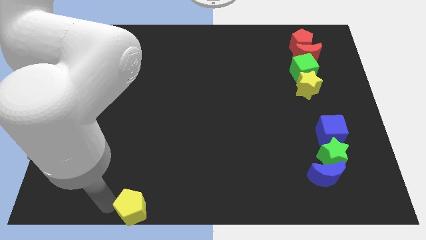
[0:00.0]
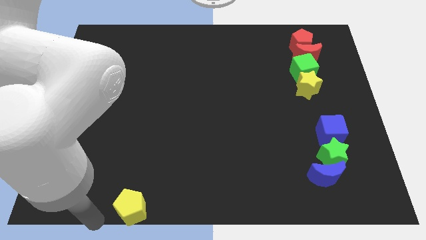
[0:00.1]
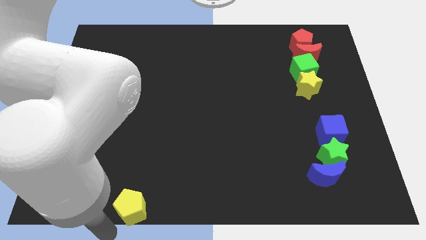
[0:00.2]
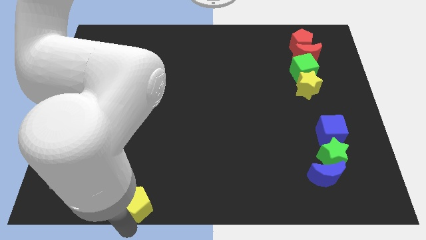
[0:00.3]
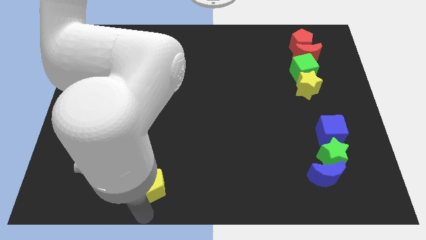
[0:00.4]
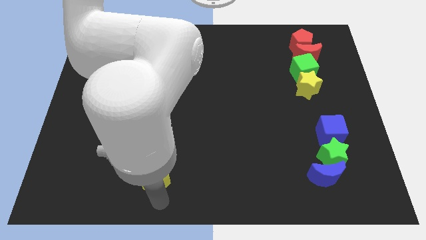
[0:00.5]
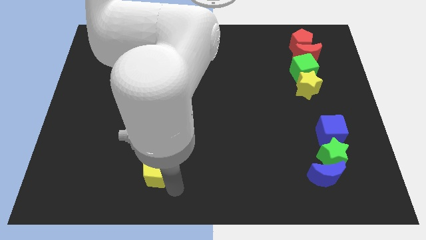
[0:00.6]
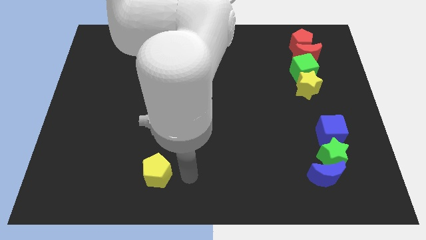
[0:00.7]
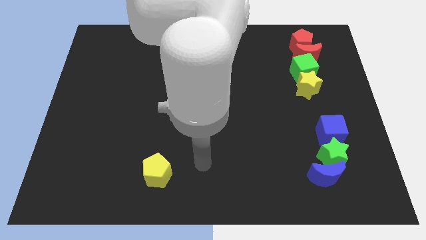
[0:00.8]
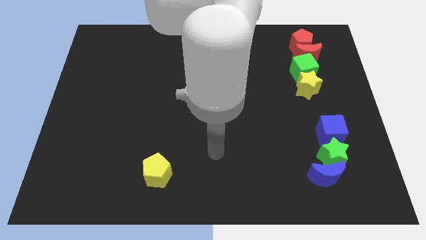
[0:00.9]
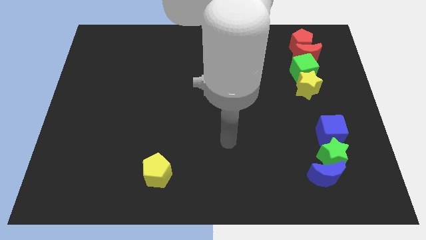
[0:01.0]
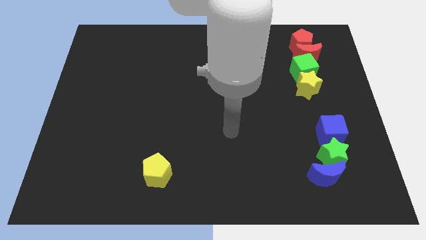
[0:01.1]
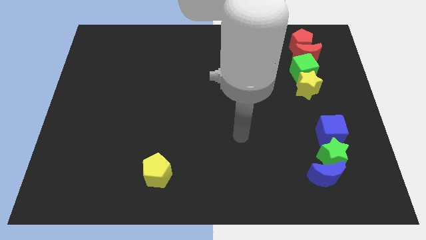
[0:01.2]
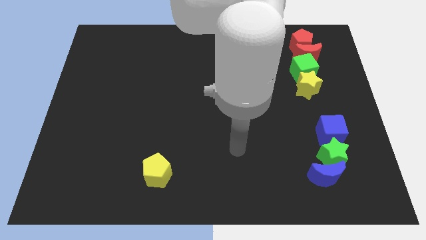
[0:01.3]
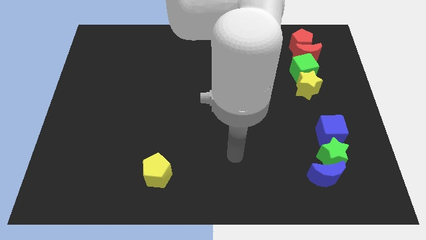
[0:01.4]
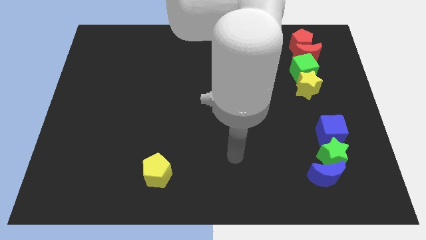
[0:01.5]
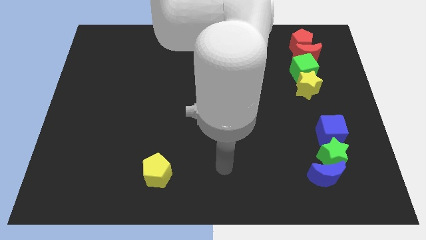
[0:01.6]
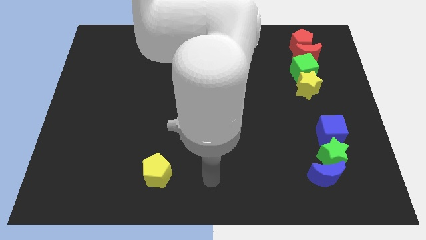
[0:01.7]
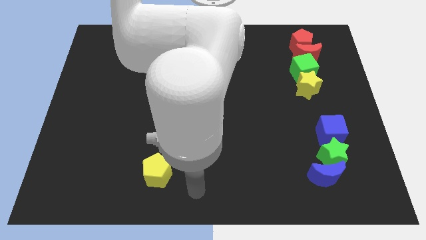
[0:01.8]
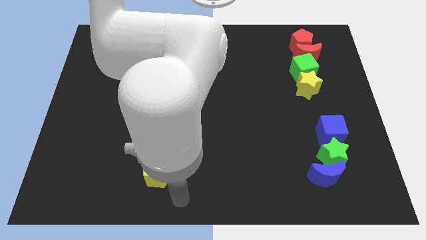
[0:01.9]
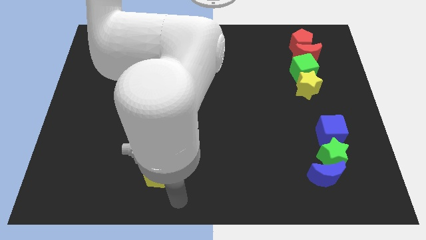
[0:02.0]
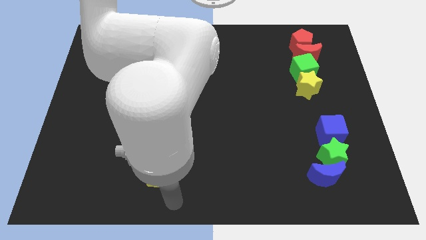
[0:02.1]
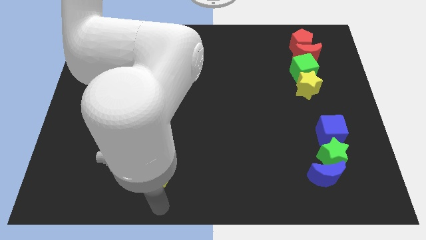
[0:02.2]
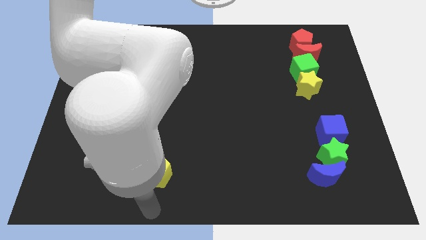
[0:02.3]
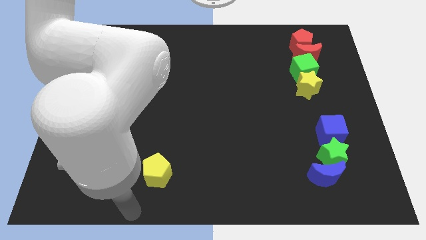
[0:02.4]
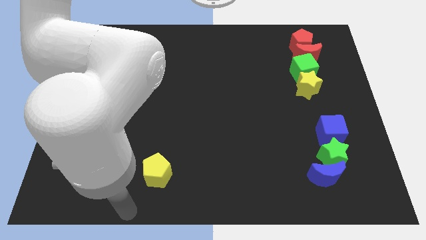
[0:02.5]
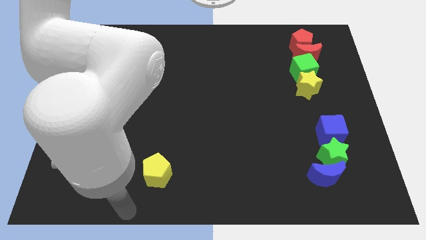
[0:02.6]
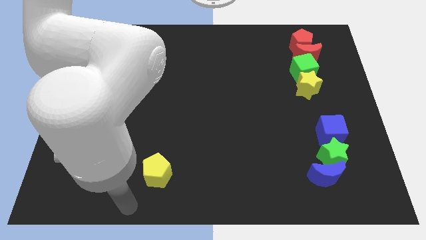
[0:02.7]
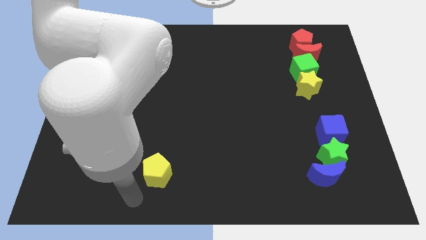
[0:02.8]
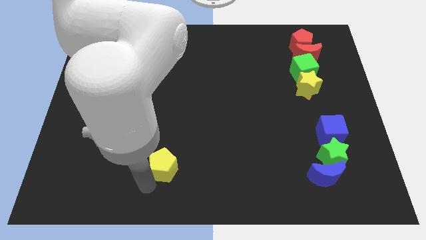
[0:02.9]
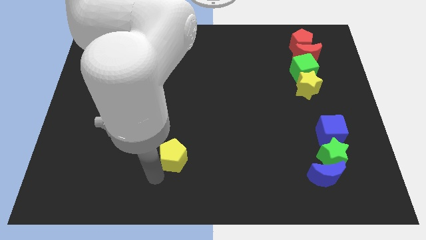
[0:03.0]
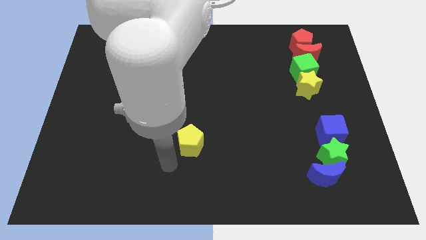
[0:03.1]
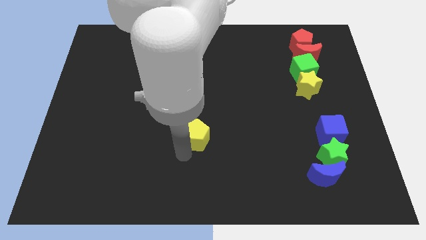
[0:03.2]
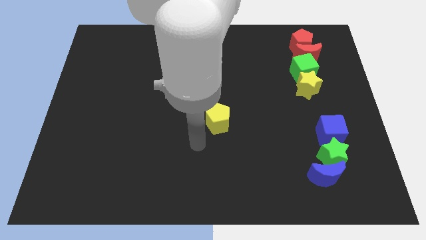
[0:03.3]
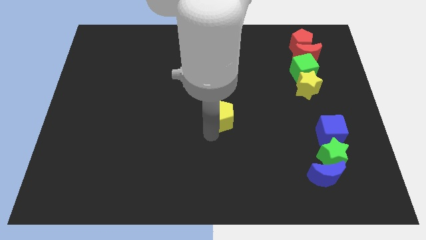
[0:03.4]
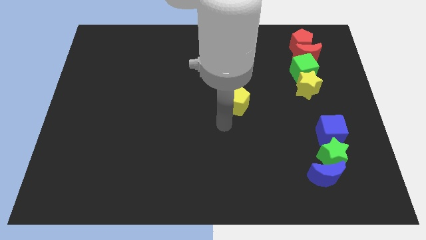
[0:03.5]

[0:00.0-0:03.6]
push the yellow pentagon to the center of the board

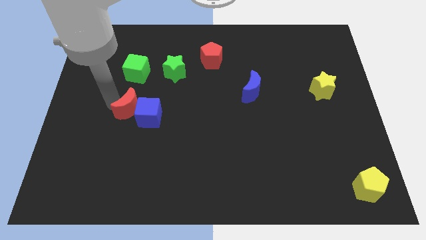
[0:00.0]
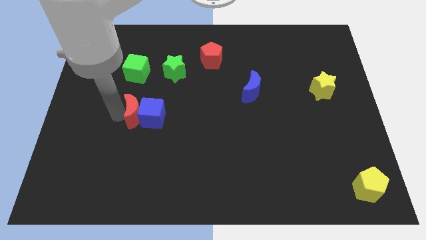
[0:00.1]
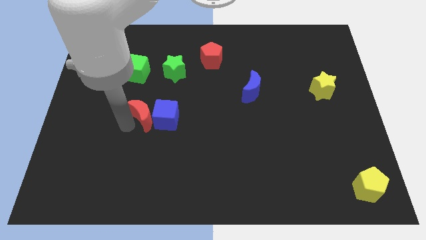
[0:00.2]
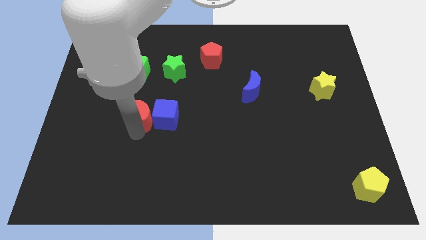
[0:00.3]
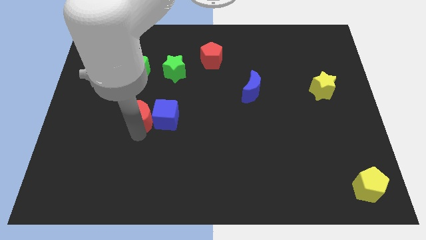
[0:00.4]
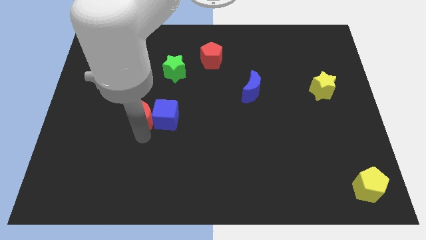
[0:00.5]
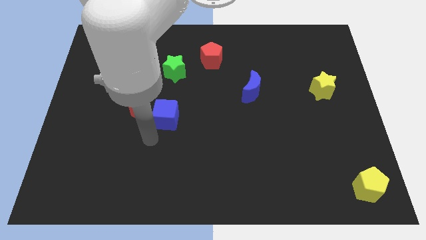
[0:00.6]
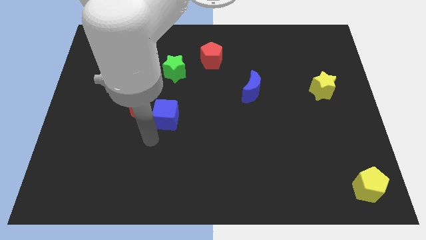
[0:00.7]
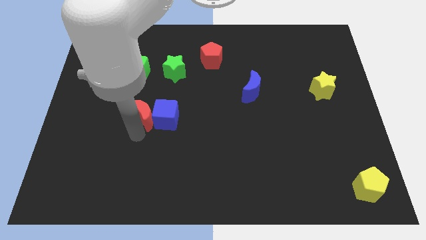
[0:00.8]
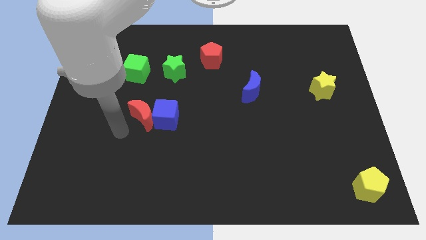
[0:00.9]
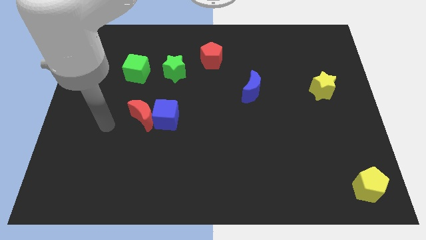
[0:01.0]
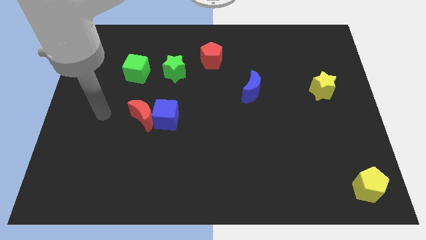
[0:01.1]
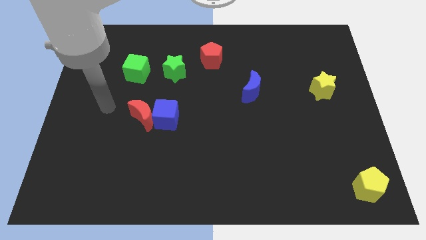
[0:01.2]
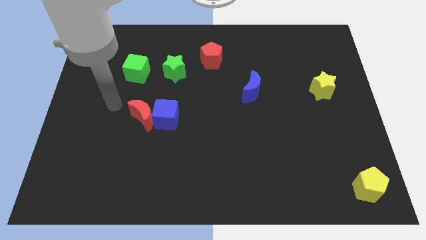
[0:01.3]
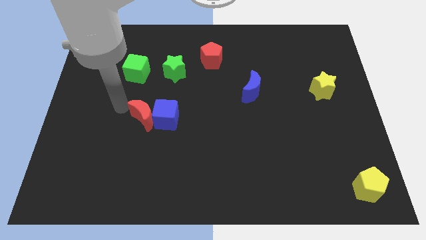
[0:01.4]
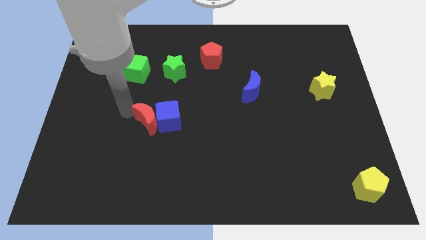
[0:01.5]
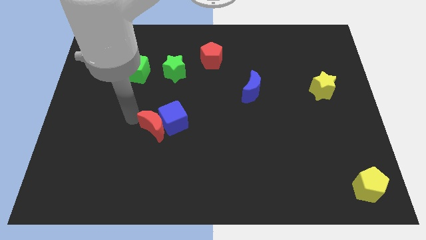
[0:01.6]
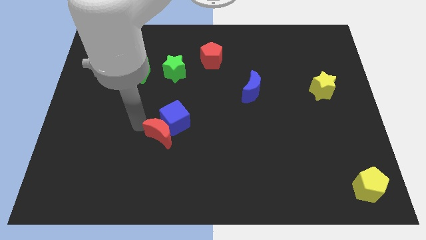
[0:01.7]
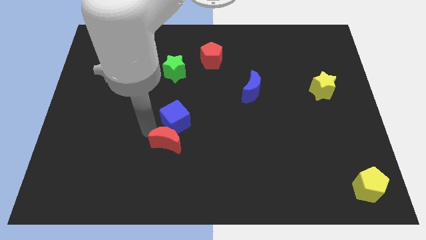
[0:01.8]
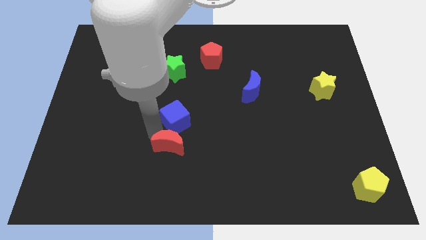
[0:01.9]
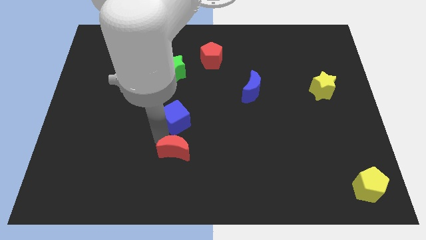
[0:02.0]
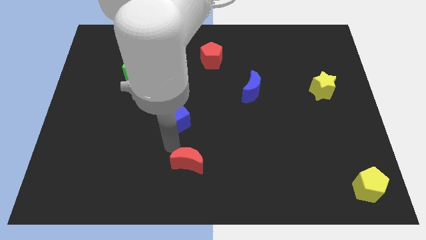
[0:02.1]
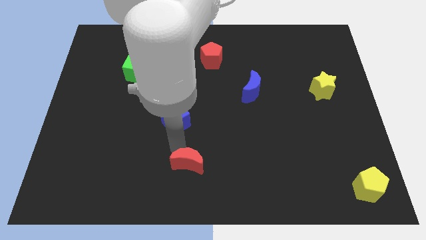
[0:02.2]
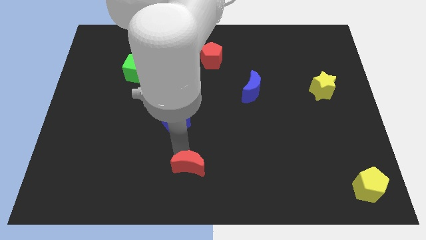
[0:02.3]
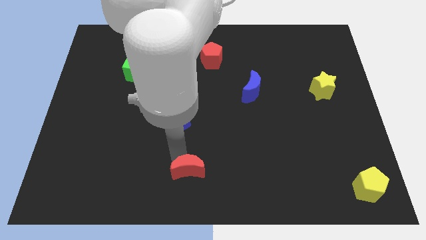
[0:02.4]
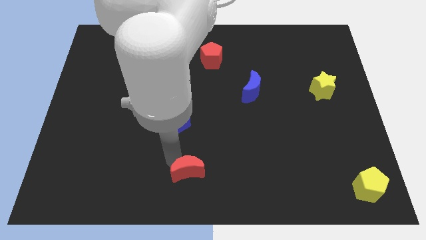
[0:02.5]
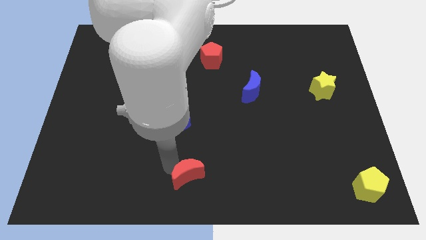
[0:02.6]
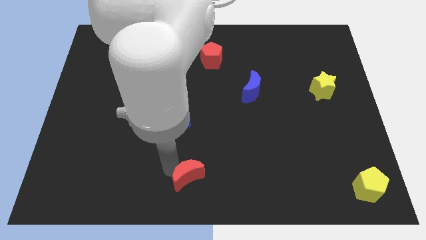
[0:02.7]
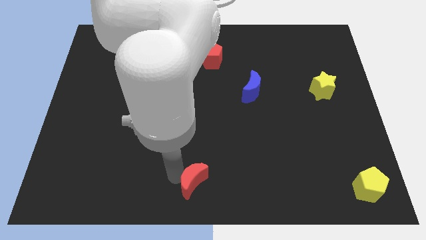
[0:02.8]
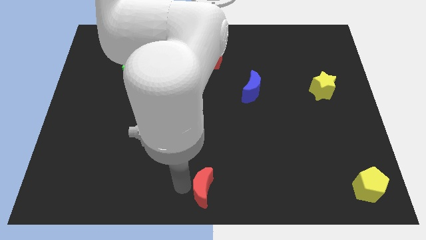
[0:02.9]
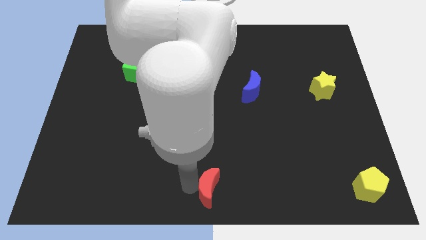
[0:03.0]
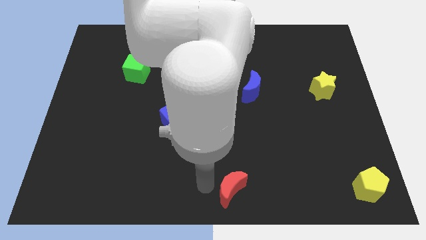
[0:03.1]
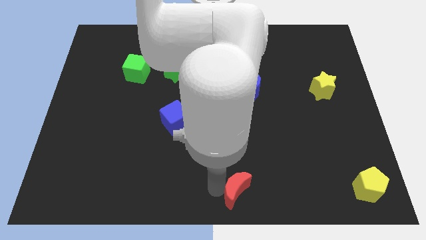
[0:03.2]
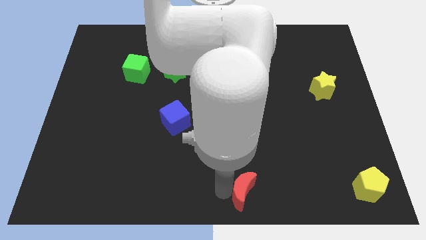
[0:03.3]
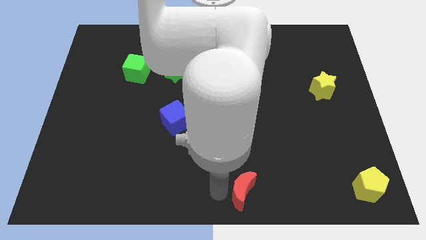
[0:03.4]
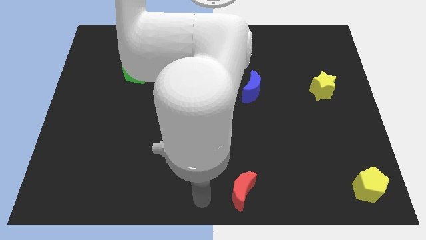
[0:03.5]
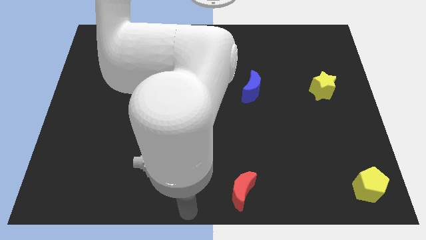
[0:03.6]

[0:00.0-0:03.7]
slide the red moon towards the bottom center

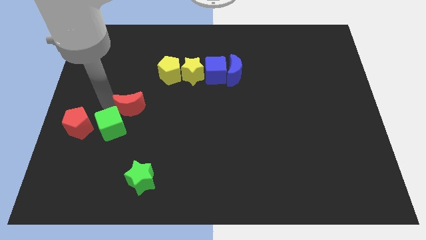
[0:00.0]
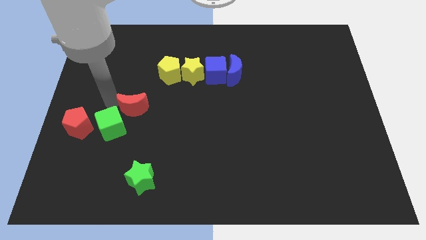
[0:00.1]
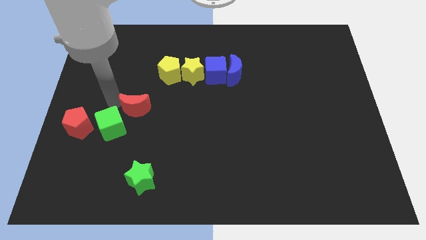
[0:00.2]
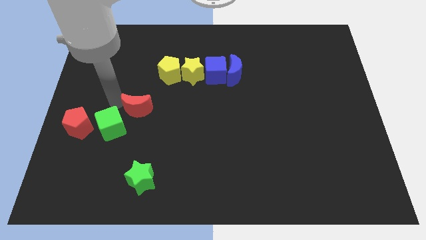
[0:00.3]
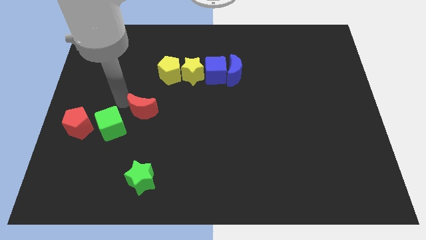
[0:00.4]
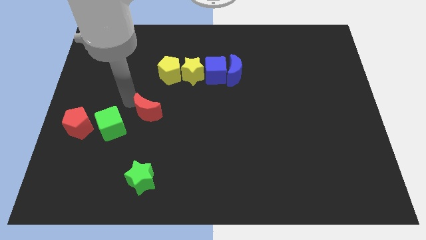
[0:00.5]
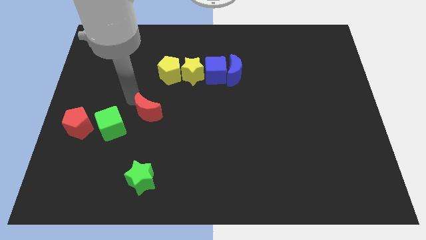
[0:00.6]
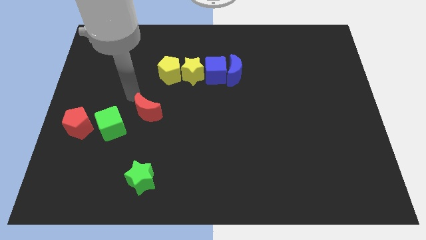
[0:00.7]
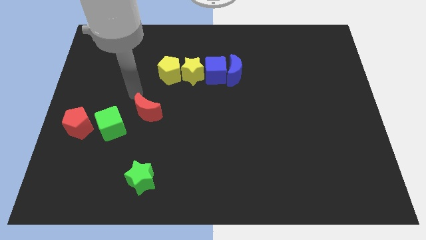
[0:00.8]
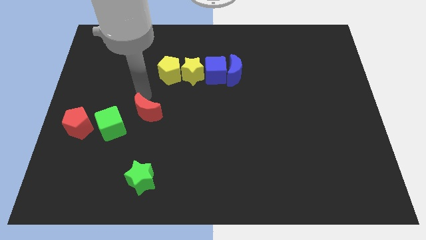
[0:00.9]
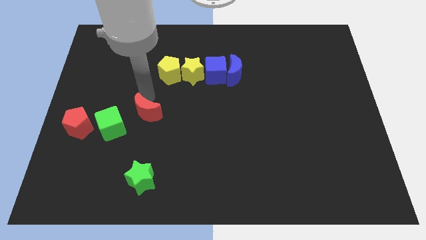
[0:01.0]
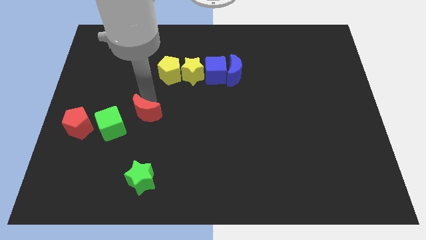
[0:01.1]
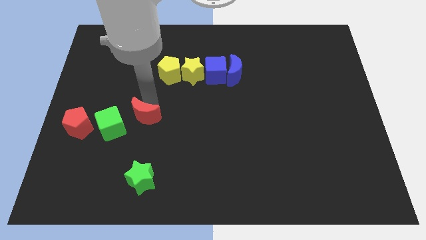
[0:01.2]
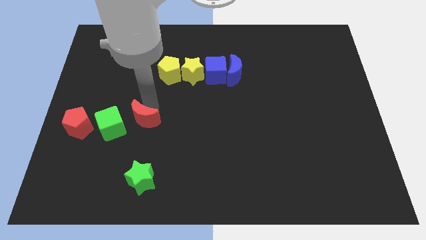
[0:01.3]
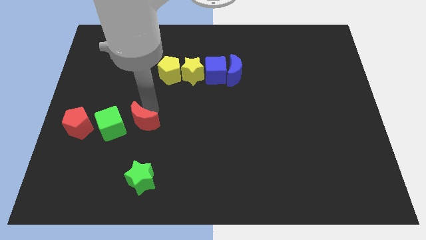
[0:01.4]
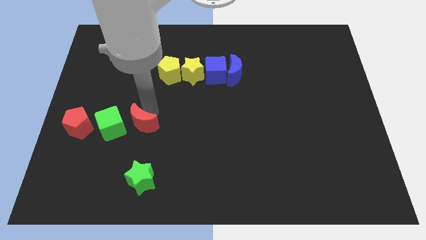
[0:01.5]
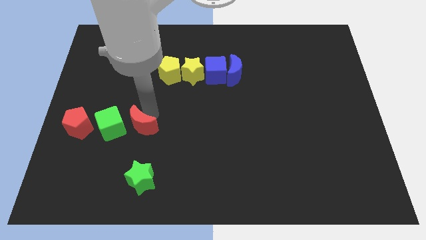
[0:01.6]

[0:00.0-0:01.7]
put the red crescent on the right side of the green cube
